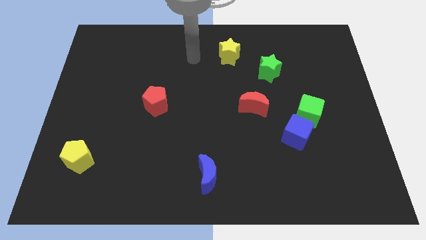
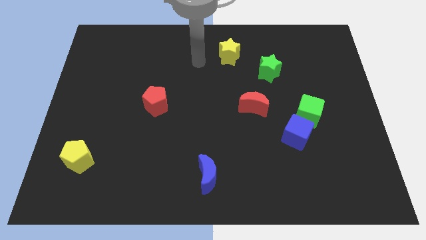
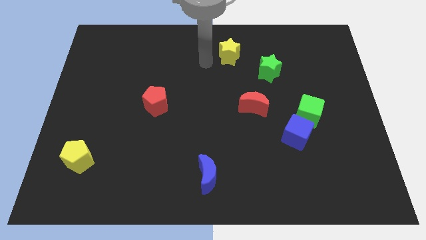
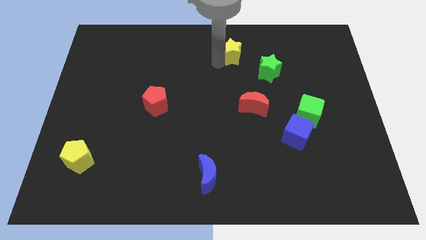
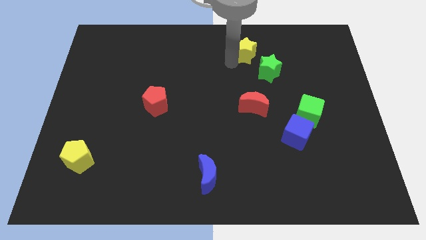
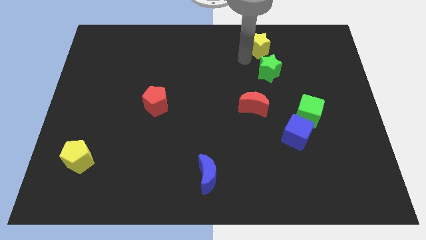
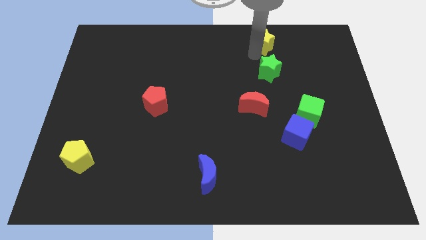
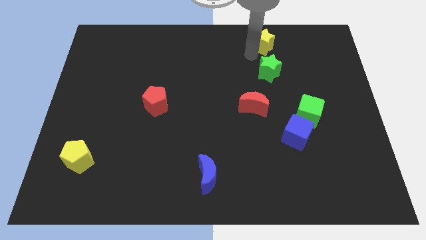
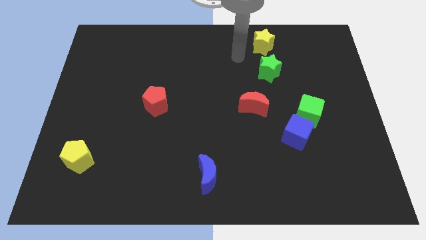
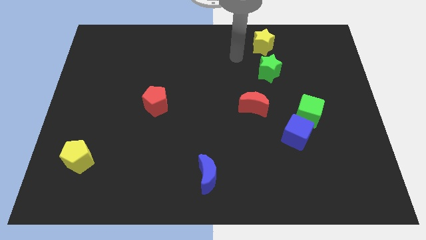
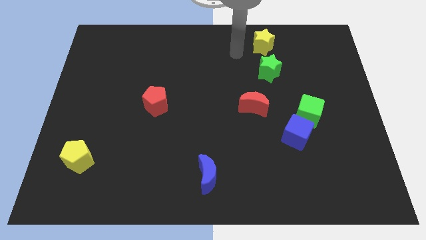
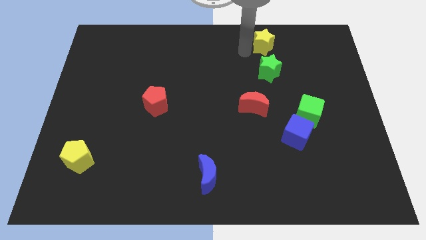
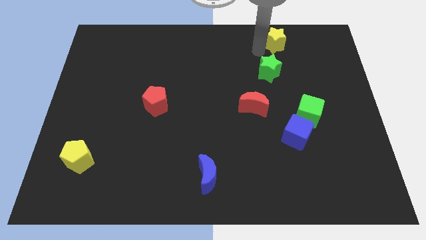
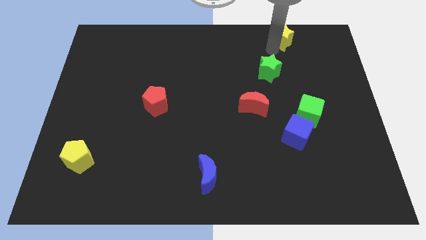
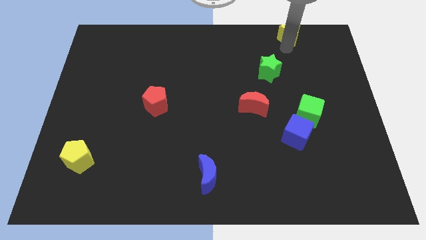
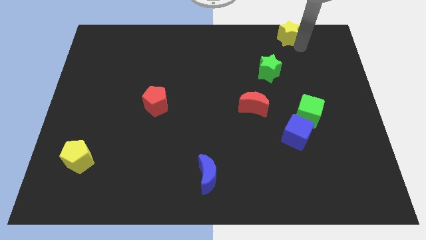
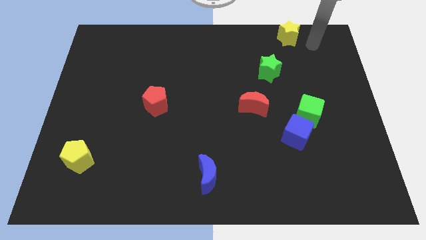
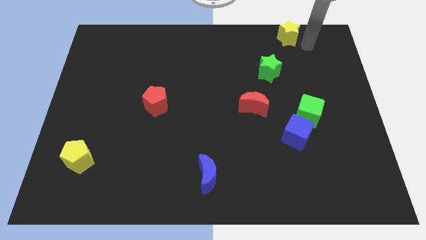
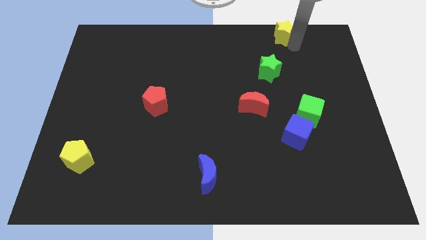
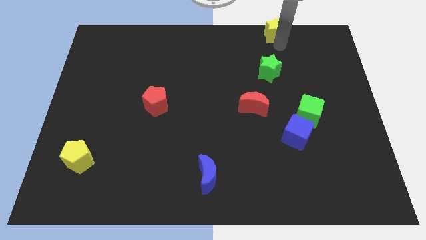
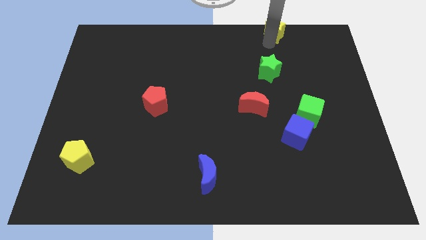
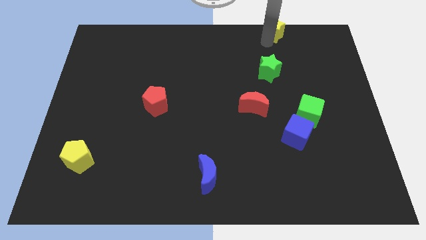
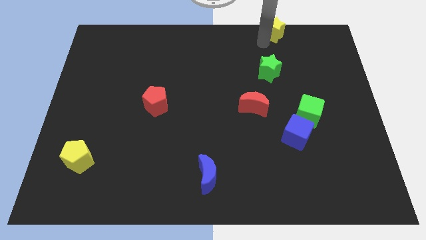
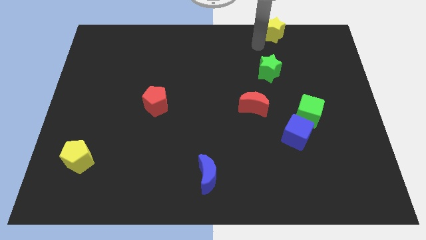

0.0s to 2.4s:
put the yellow star vertically above the green star

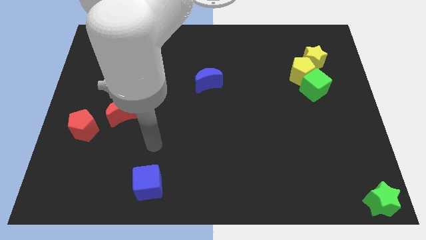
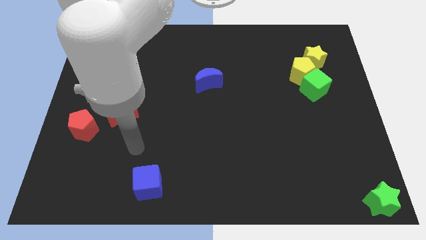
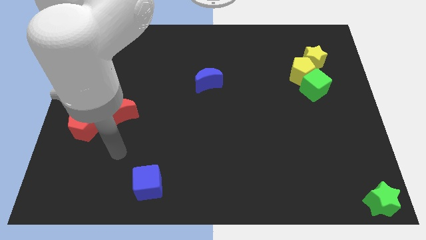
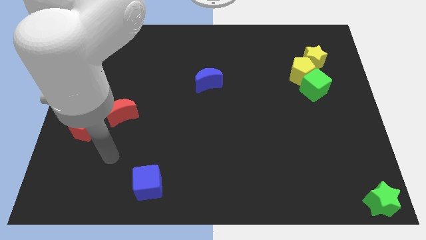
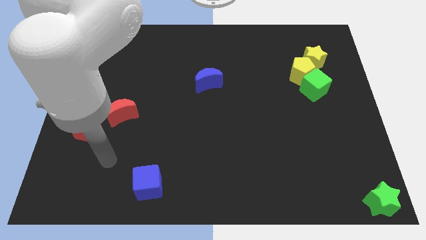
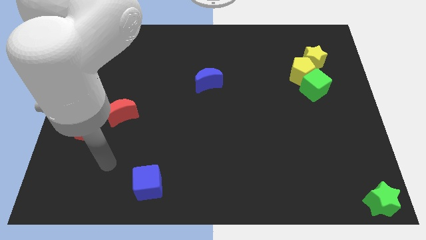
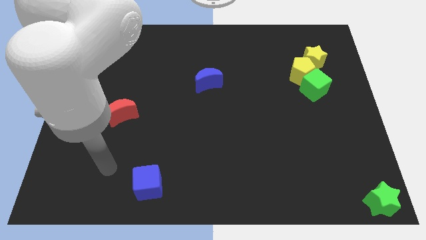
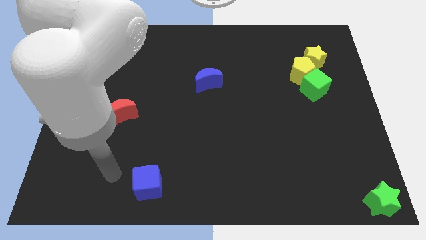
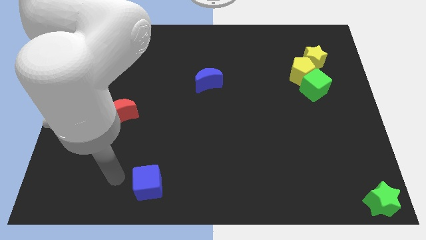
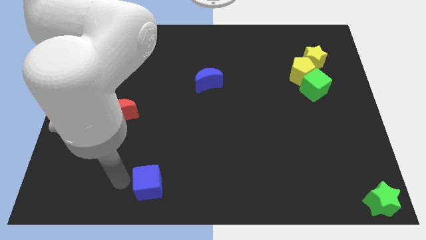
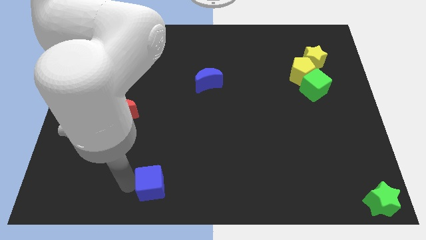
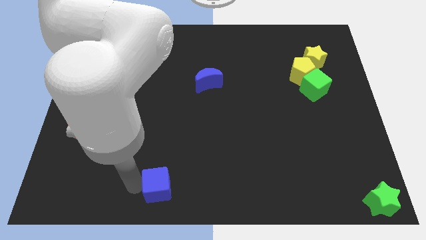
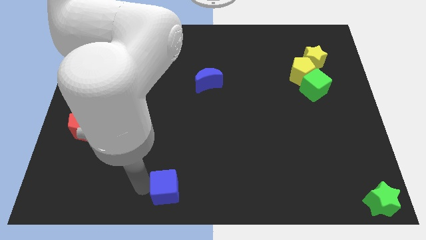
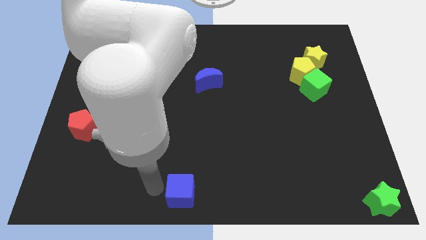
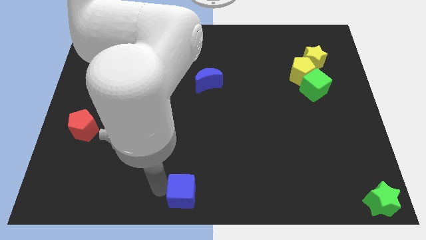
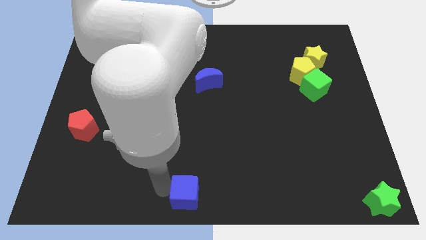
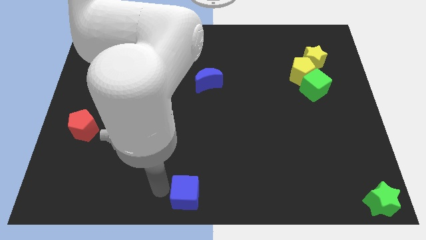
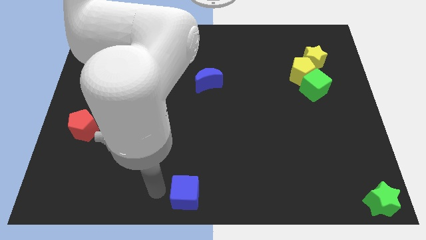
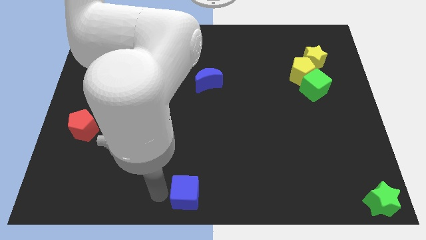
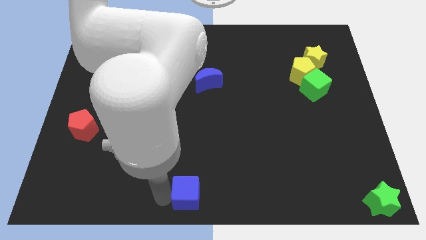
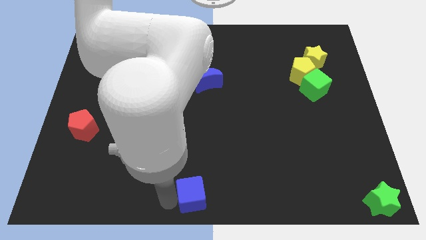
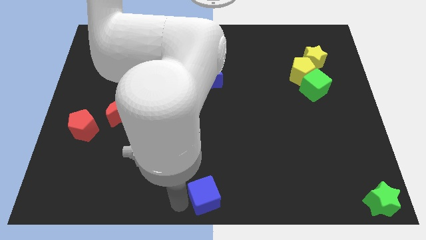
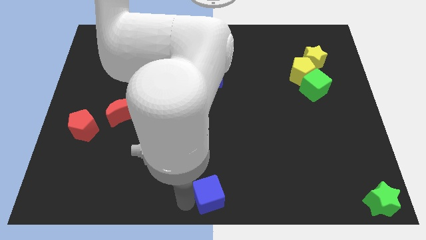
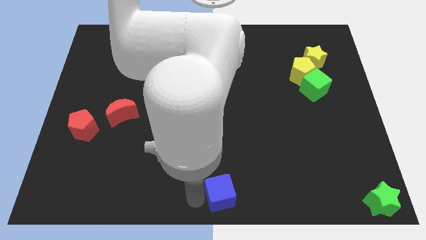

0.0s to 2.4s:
move the blue cube to the bottom center of the board

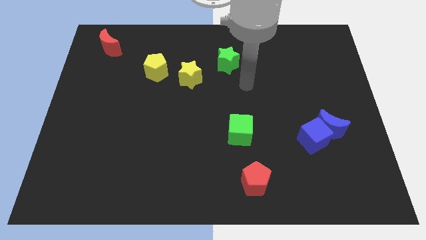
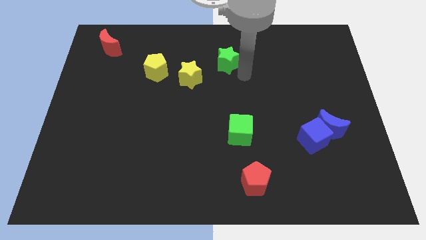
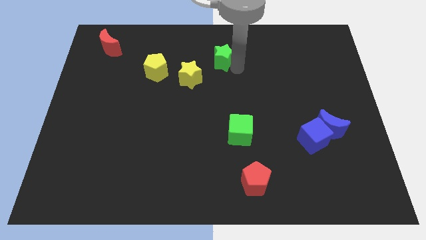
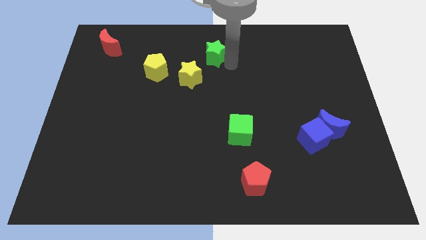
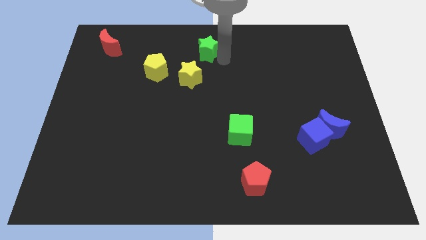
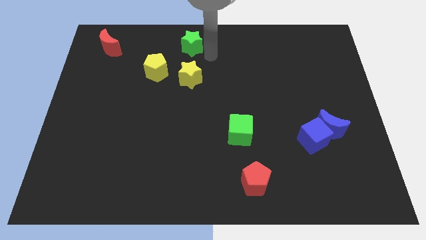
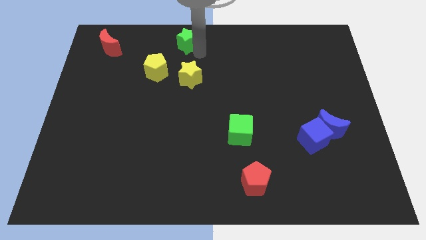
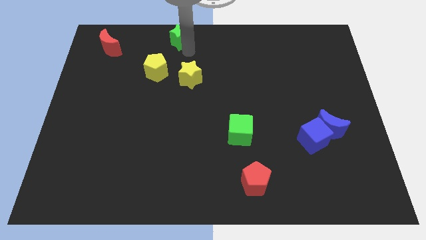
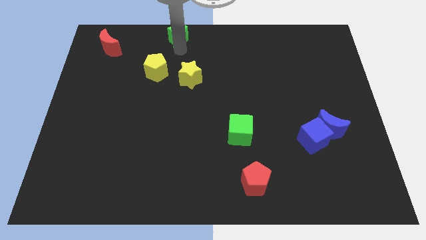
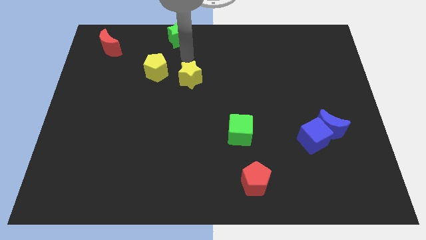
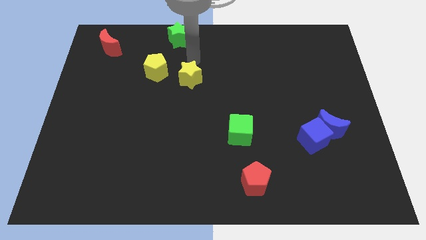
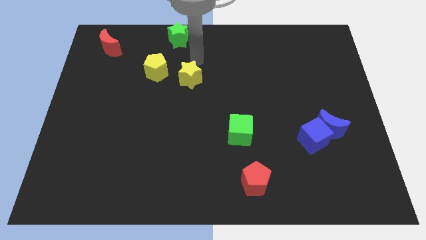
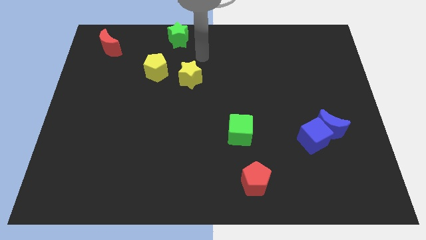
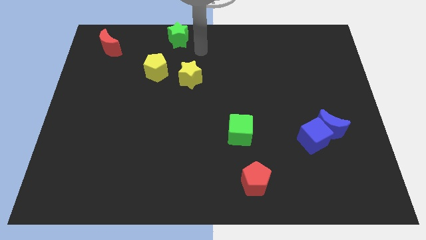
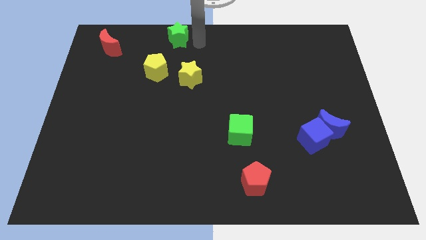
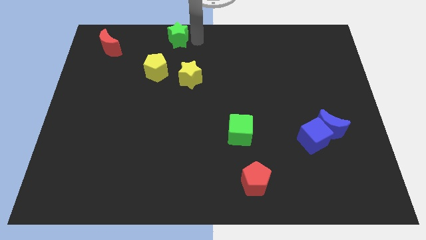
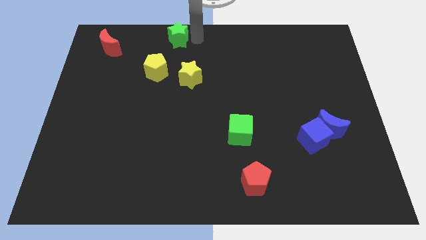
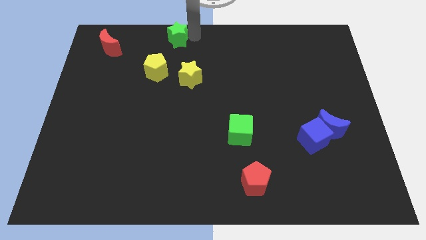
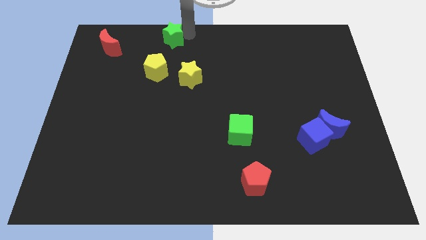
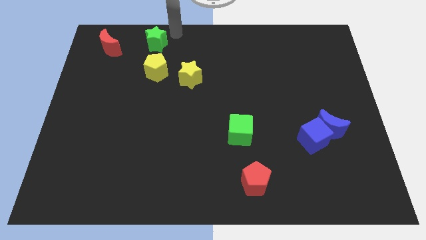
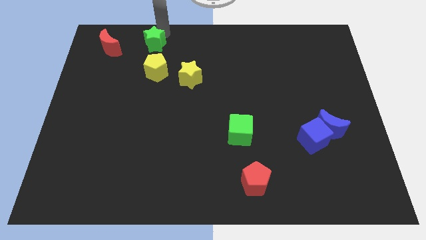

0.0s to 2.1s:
push the green star to the top side of the yellow pentagon

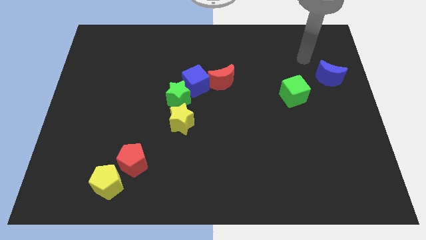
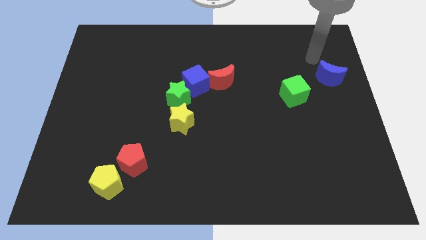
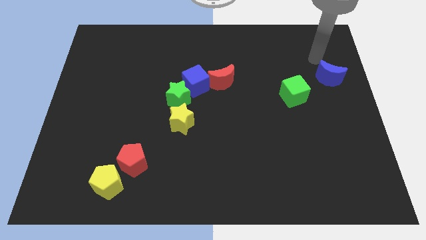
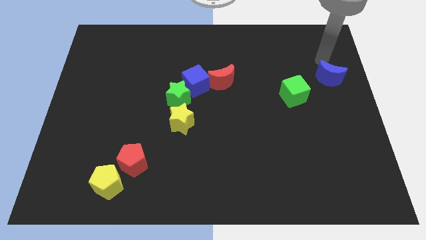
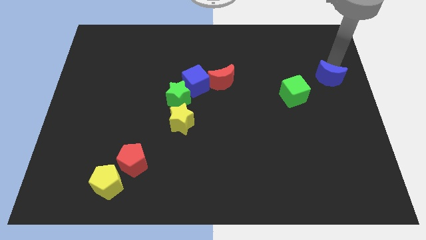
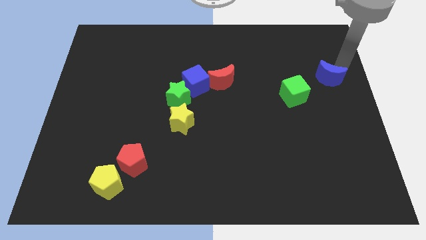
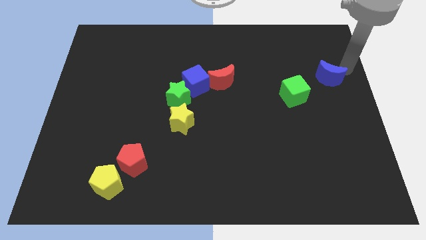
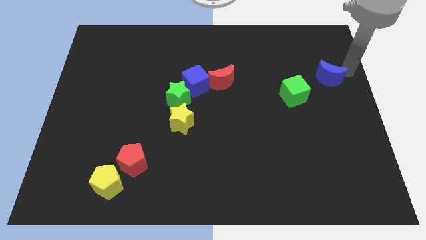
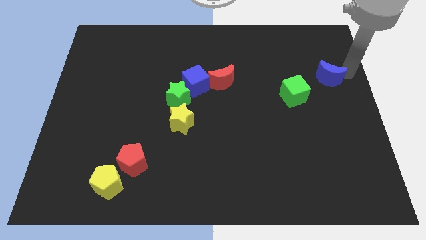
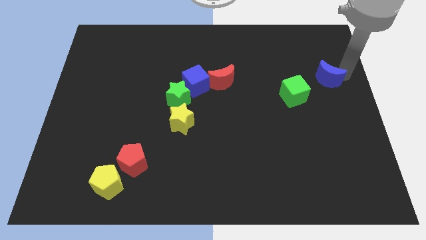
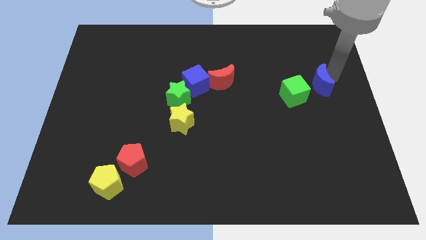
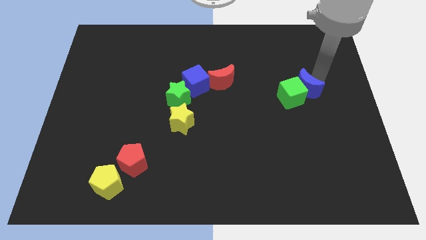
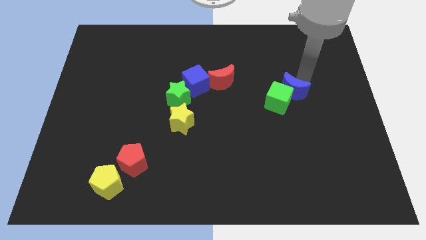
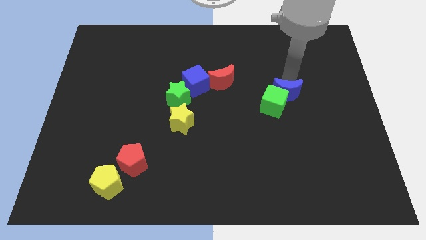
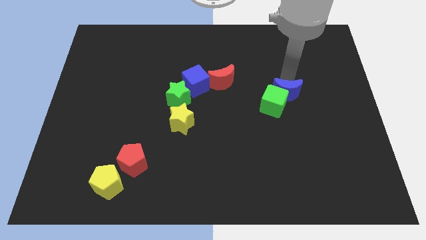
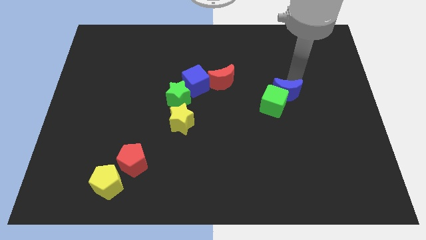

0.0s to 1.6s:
push blue moon into the green cube

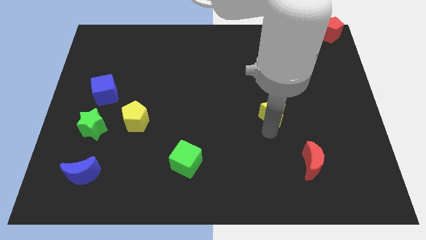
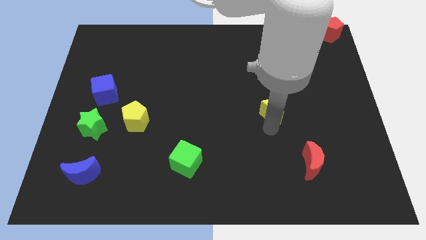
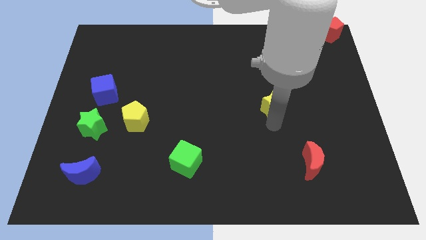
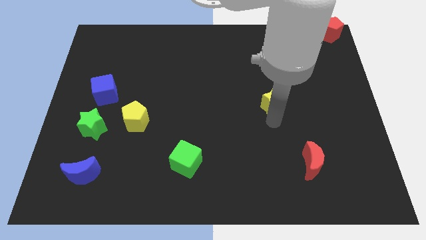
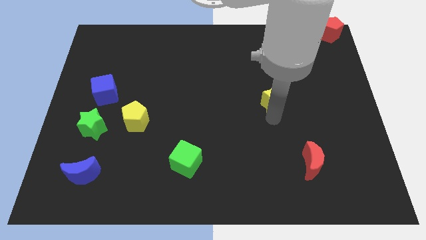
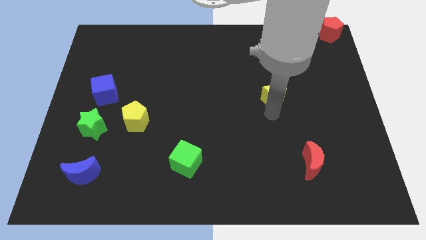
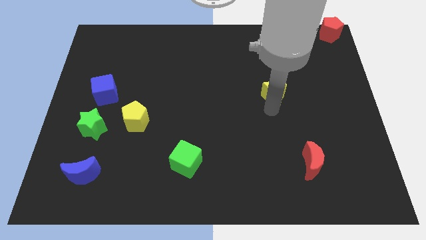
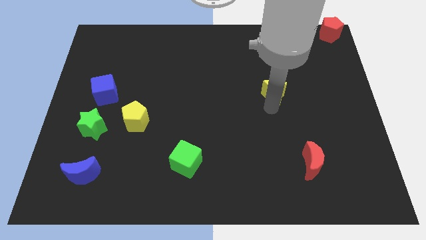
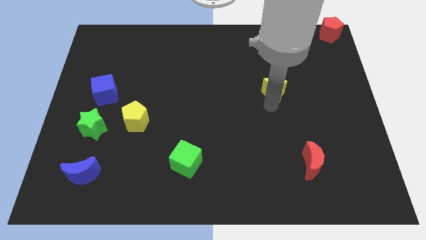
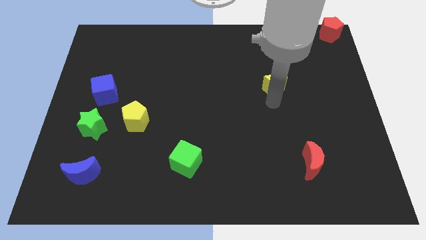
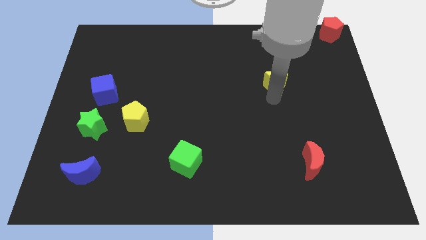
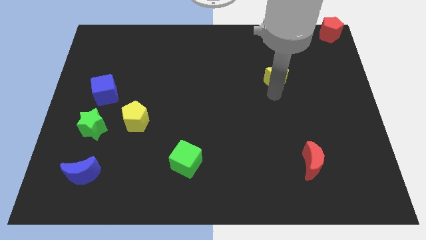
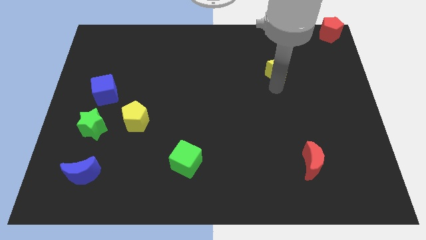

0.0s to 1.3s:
move the yellow star slightly to the top side of the board
